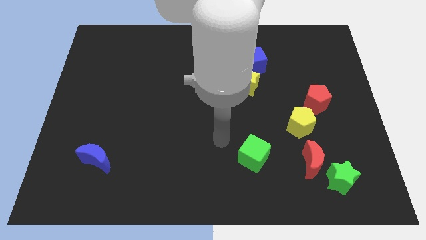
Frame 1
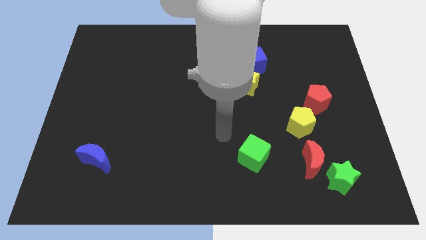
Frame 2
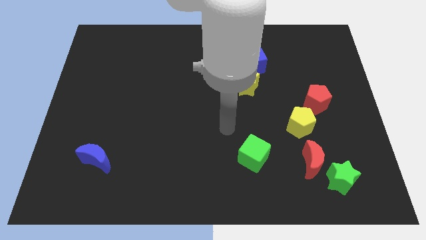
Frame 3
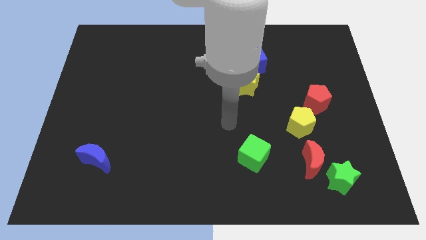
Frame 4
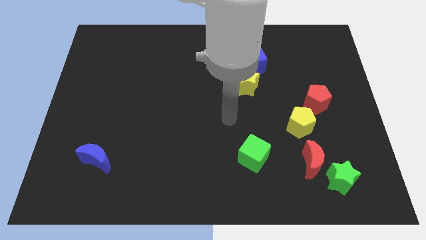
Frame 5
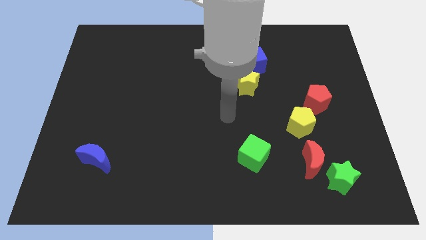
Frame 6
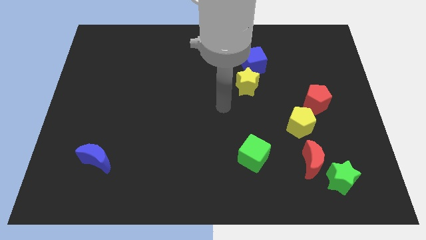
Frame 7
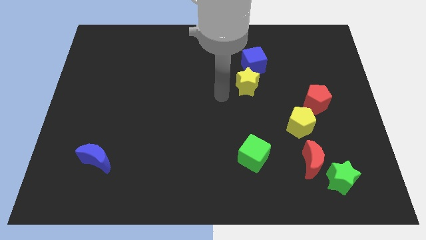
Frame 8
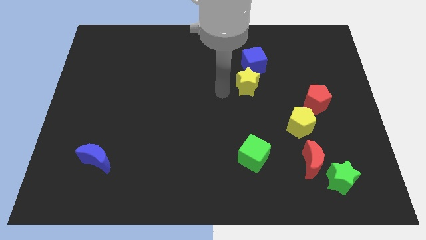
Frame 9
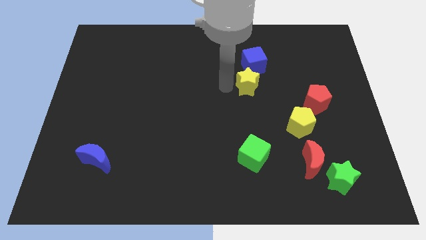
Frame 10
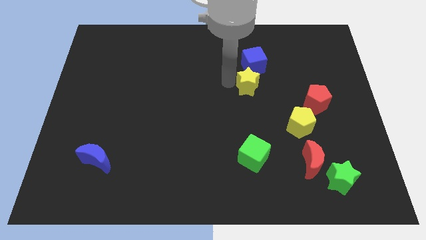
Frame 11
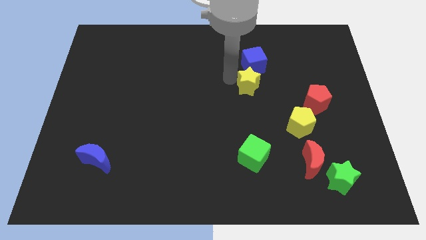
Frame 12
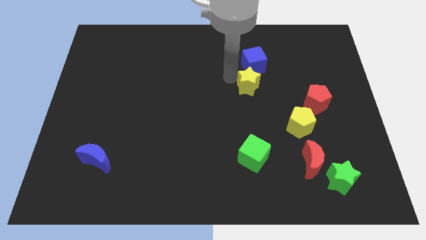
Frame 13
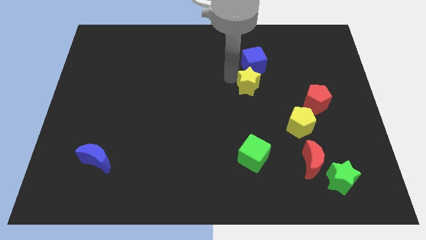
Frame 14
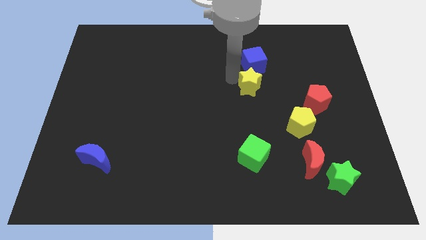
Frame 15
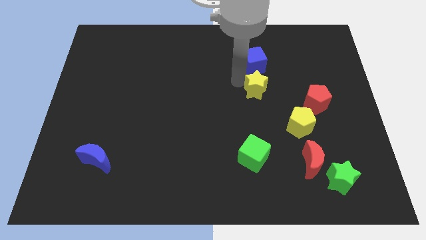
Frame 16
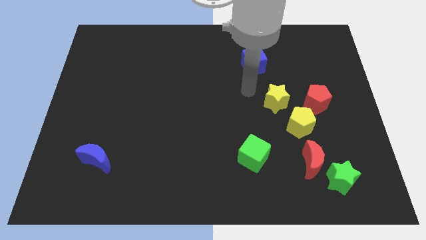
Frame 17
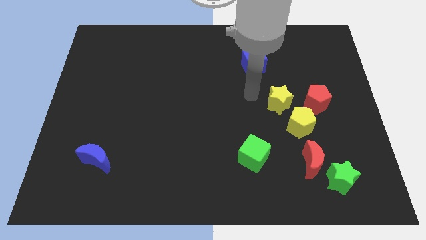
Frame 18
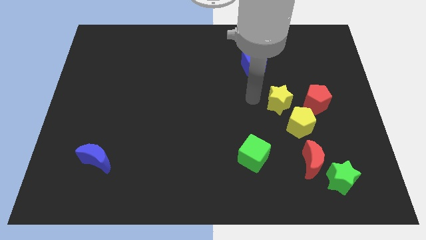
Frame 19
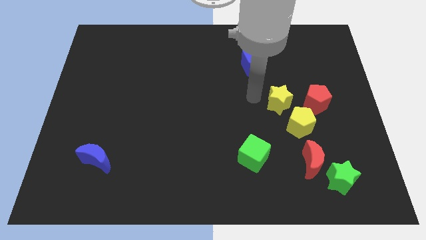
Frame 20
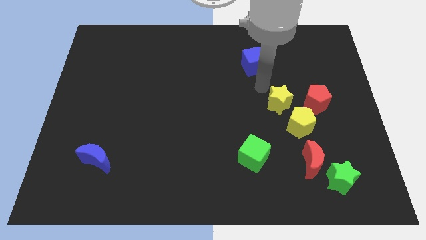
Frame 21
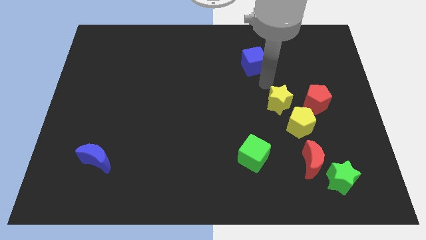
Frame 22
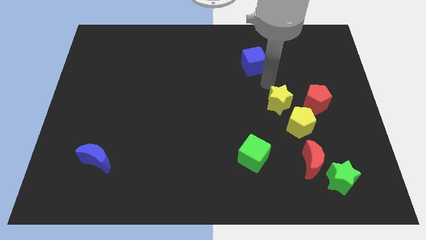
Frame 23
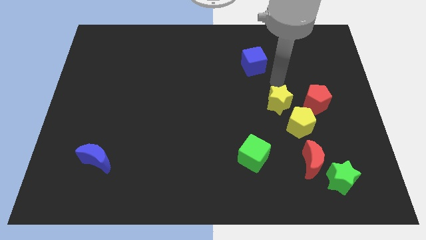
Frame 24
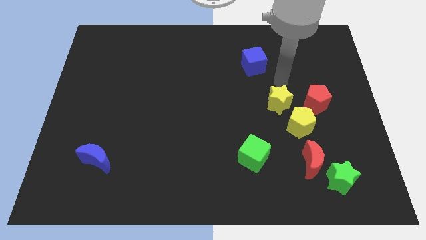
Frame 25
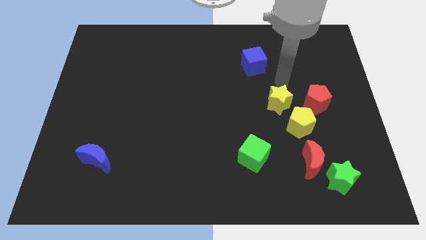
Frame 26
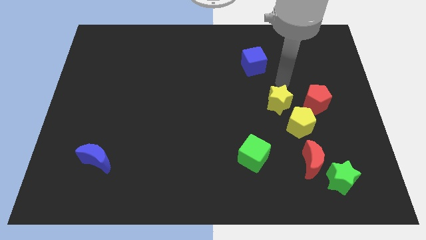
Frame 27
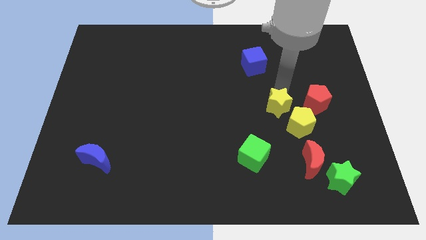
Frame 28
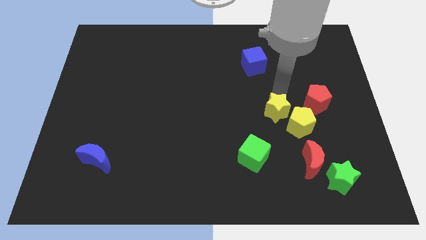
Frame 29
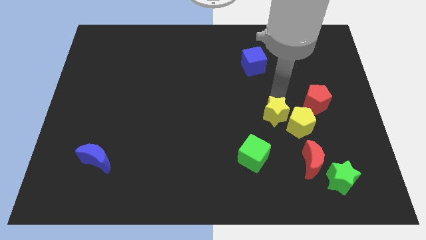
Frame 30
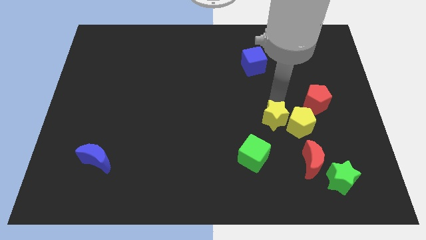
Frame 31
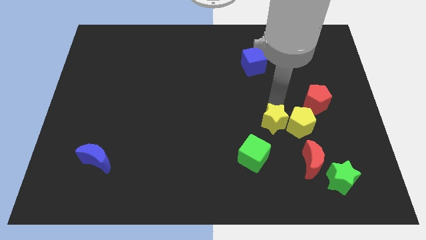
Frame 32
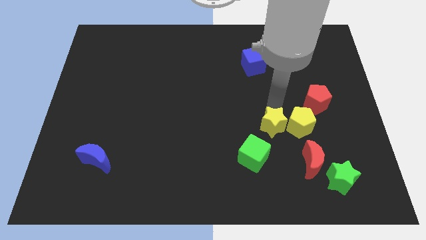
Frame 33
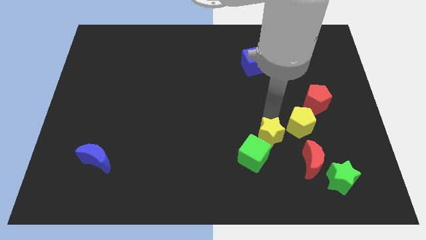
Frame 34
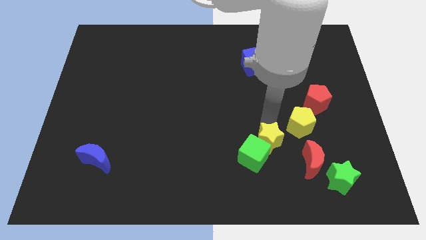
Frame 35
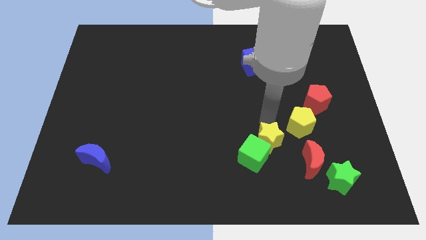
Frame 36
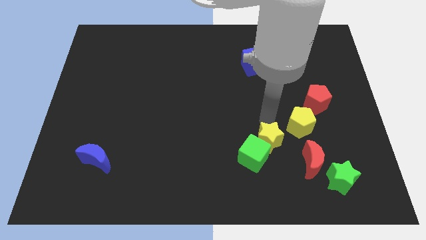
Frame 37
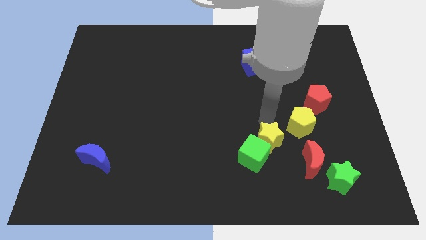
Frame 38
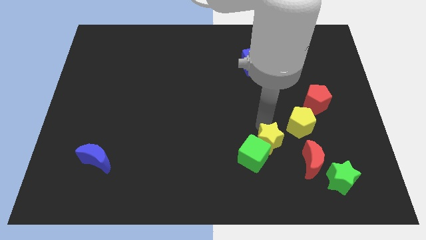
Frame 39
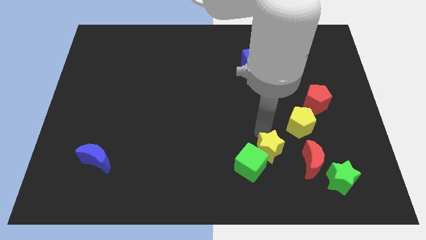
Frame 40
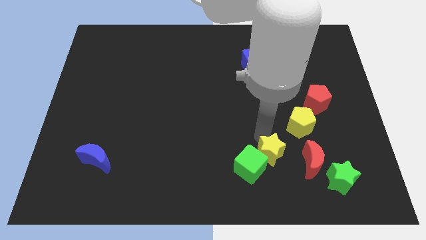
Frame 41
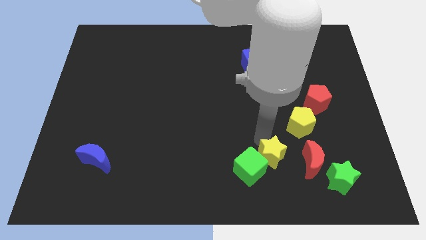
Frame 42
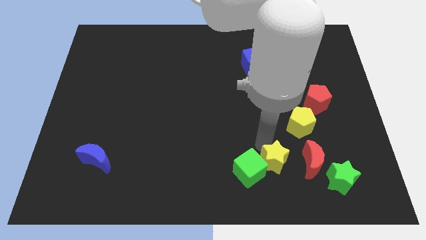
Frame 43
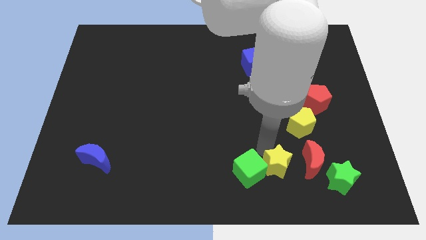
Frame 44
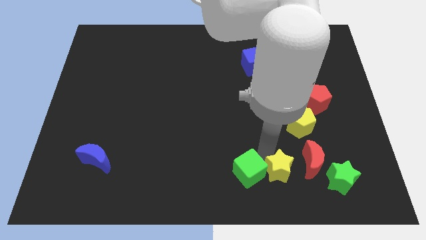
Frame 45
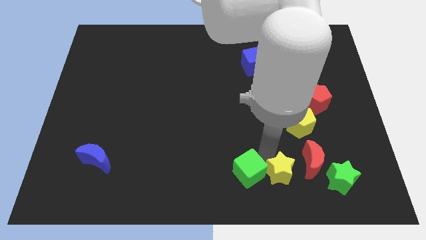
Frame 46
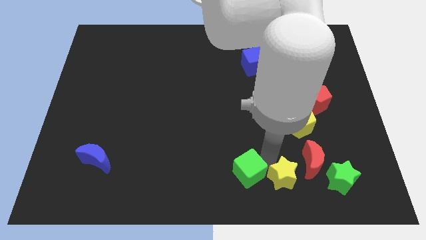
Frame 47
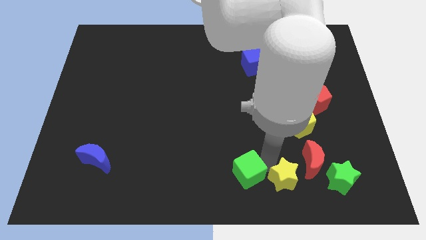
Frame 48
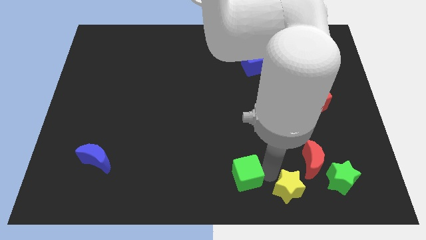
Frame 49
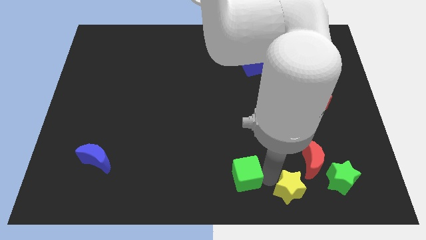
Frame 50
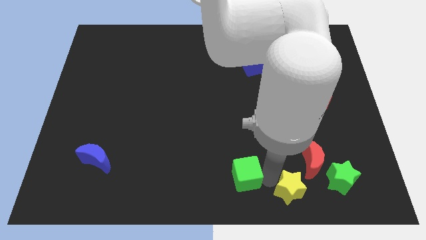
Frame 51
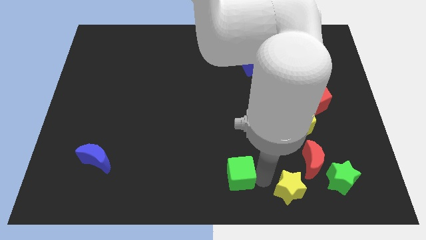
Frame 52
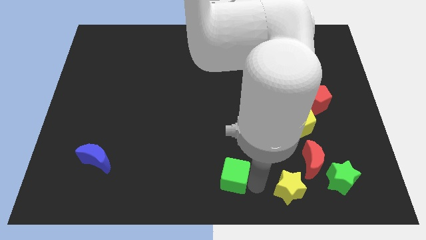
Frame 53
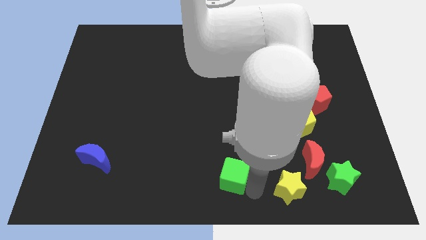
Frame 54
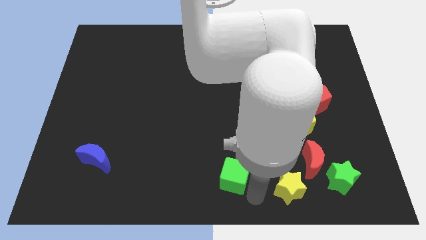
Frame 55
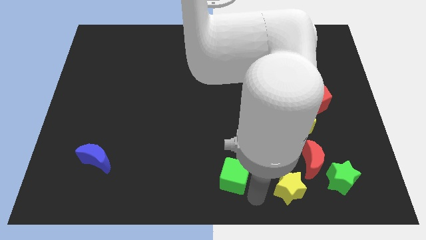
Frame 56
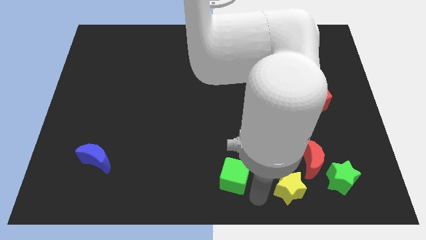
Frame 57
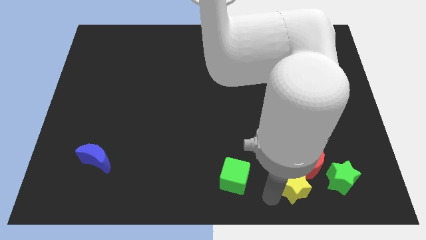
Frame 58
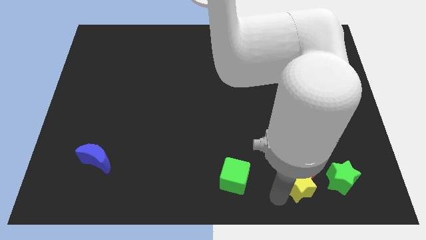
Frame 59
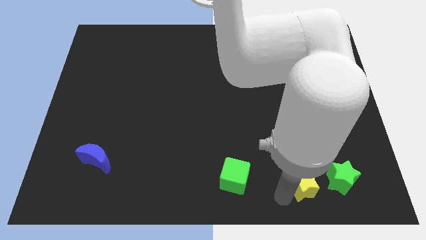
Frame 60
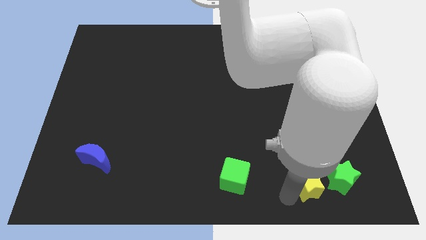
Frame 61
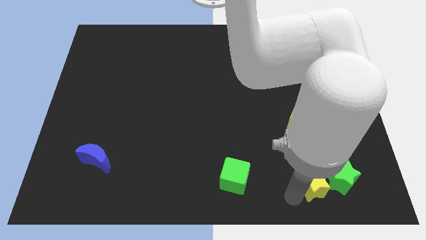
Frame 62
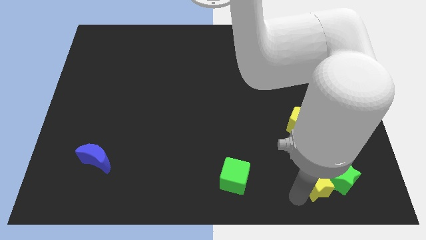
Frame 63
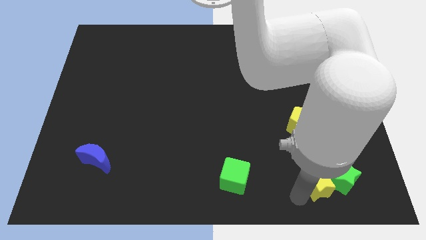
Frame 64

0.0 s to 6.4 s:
slide the yellow star to the green star

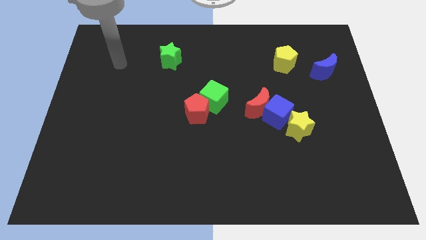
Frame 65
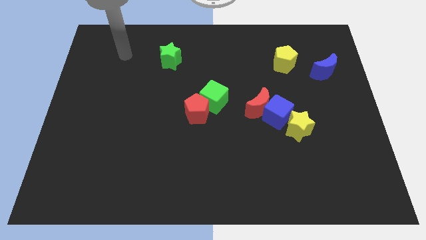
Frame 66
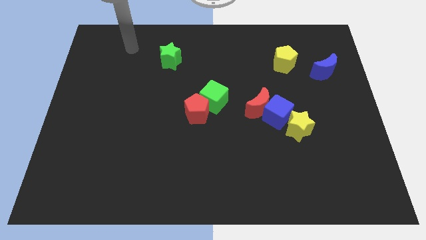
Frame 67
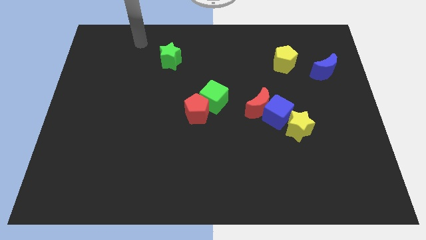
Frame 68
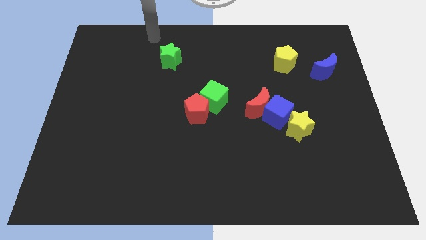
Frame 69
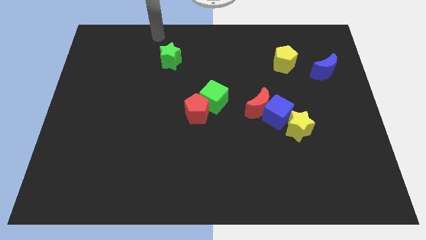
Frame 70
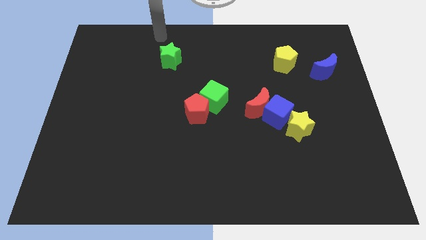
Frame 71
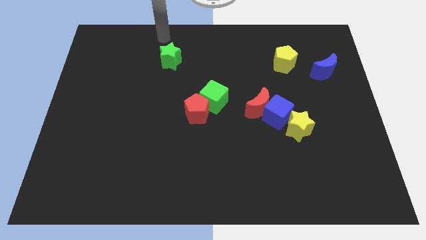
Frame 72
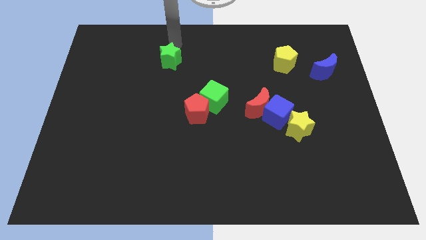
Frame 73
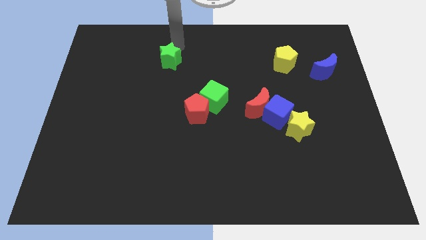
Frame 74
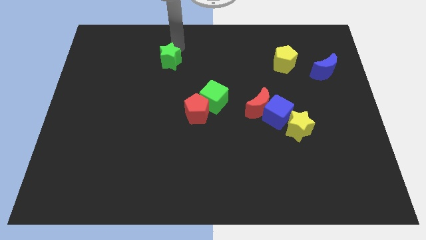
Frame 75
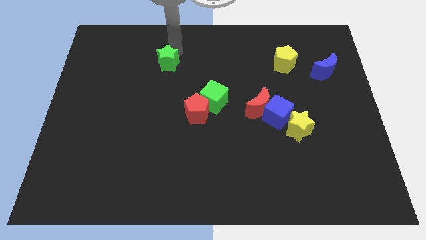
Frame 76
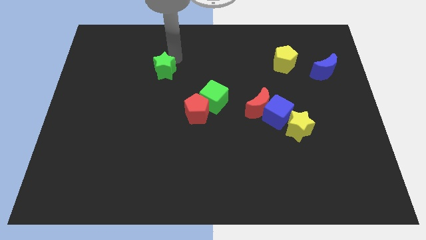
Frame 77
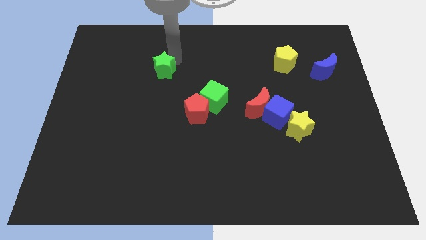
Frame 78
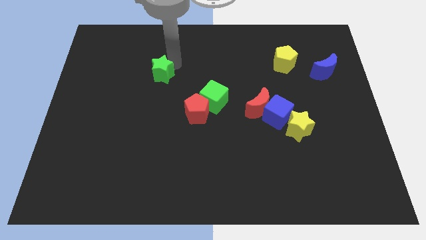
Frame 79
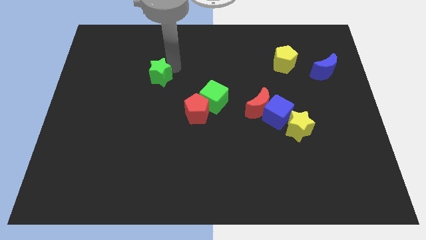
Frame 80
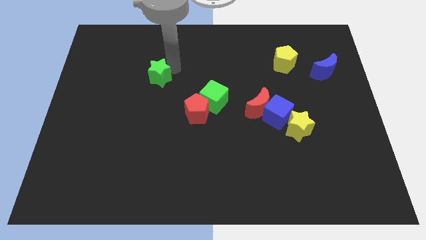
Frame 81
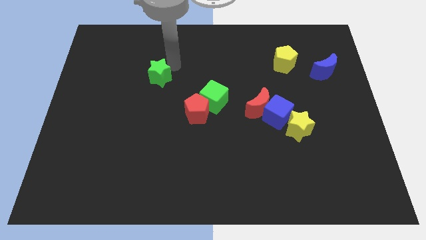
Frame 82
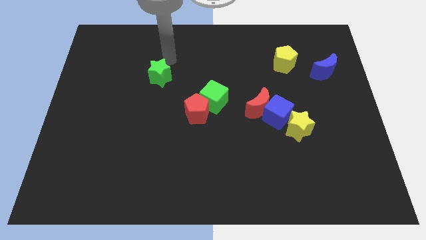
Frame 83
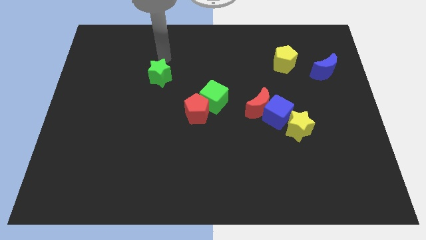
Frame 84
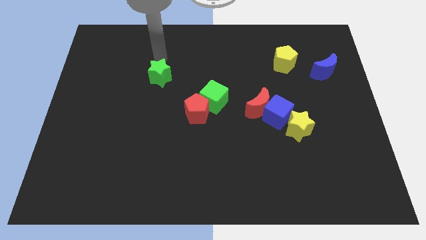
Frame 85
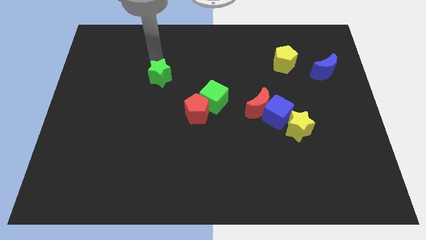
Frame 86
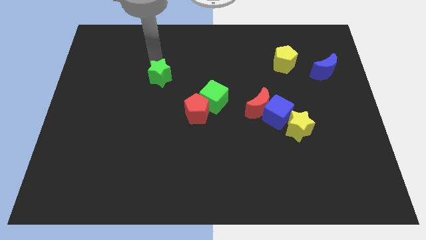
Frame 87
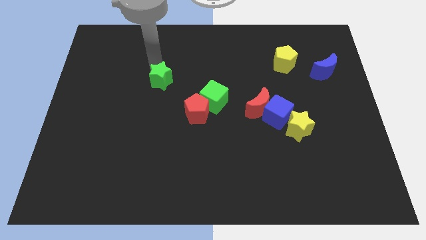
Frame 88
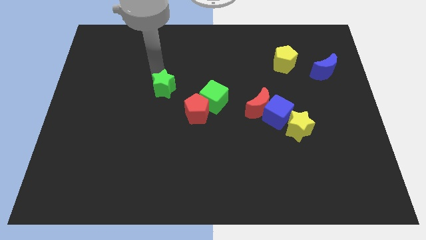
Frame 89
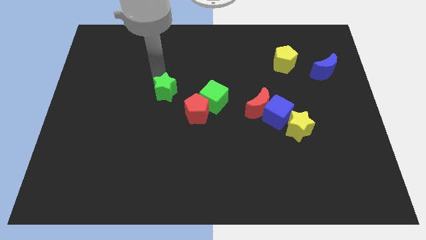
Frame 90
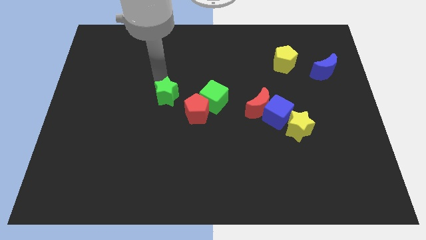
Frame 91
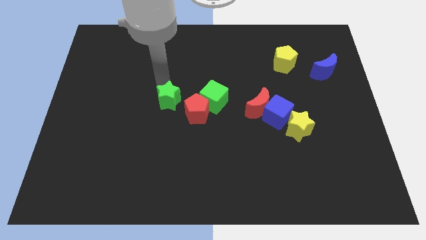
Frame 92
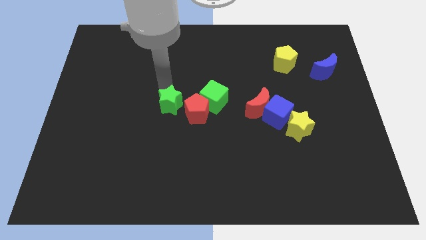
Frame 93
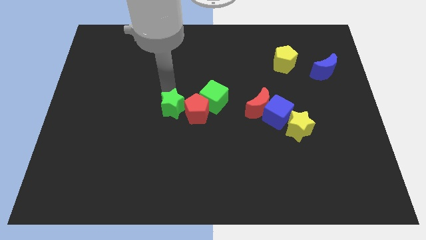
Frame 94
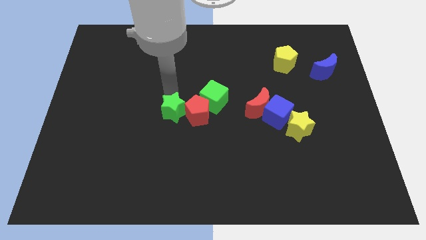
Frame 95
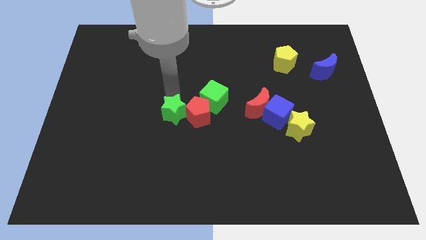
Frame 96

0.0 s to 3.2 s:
push the green star close to the red pentagon
